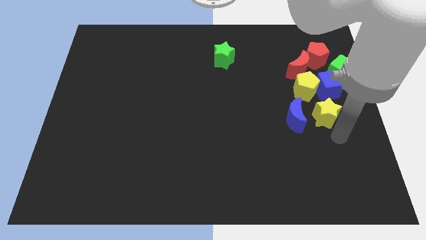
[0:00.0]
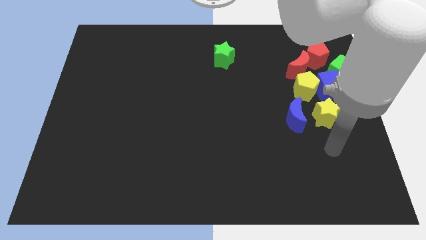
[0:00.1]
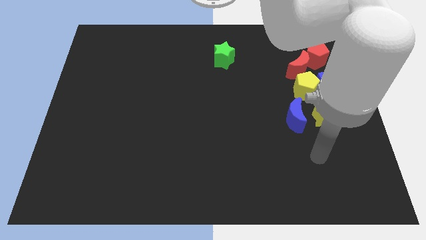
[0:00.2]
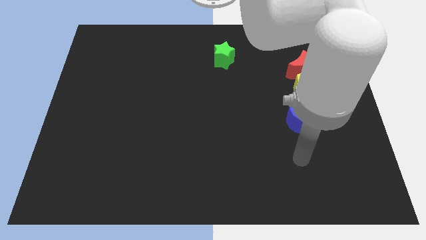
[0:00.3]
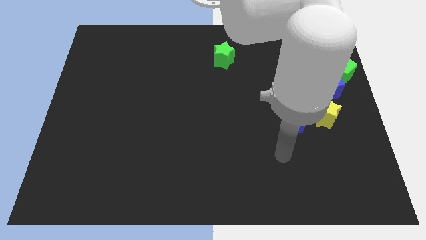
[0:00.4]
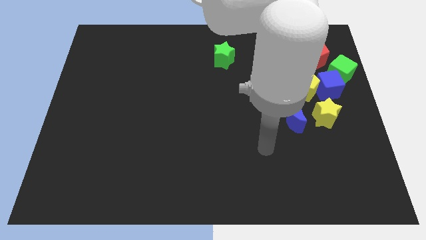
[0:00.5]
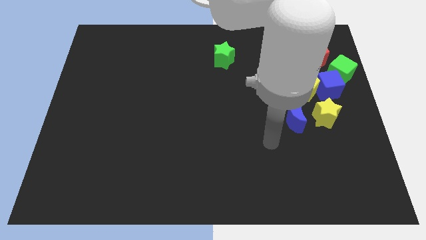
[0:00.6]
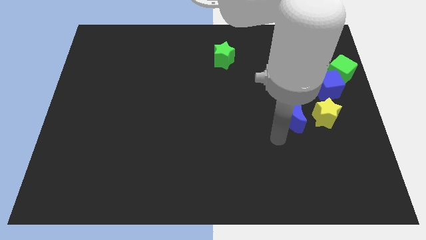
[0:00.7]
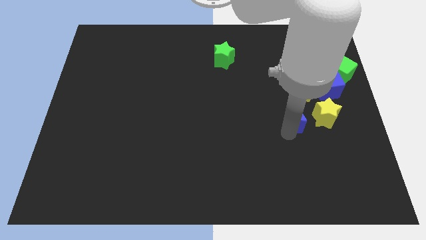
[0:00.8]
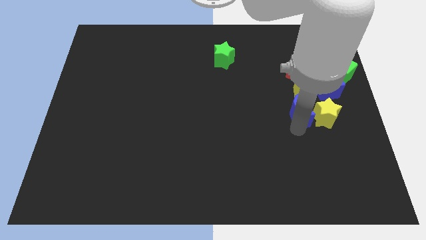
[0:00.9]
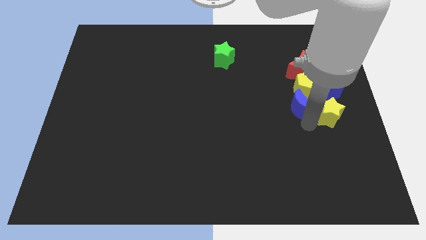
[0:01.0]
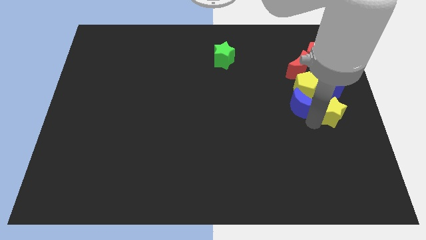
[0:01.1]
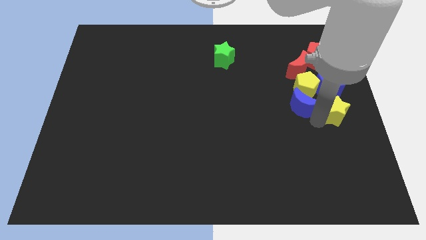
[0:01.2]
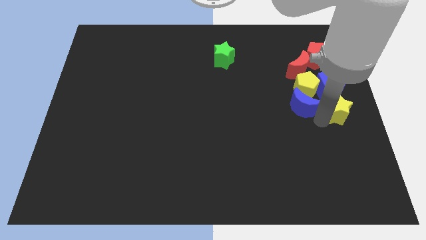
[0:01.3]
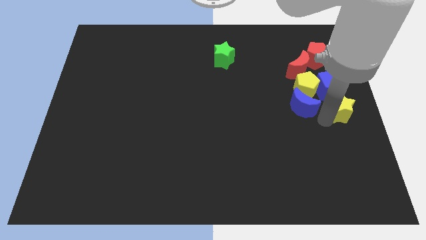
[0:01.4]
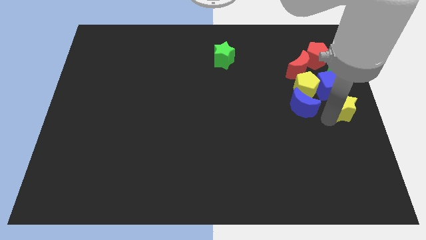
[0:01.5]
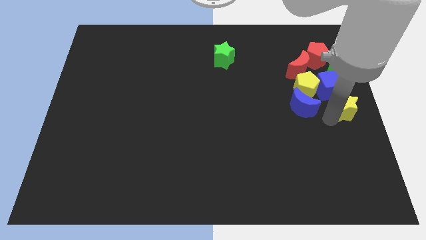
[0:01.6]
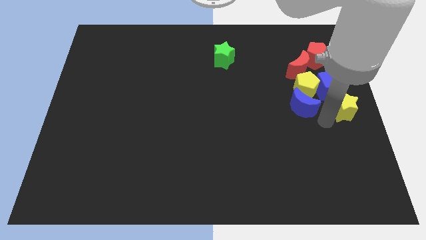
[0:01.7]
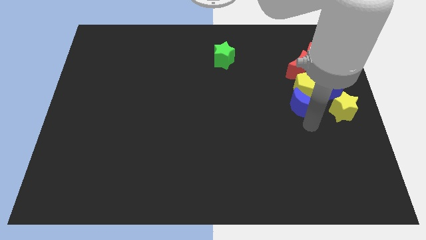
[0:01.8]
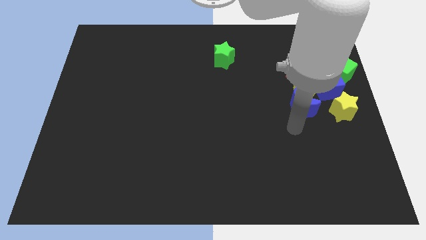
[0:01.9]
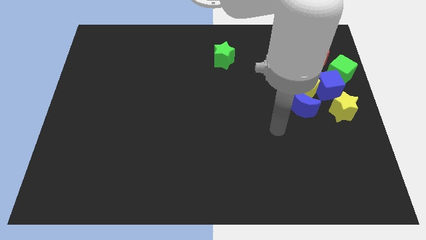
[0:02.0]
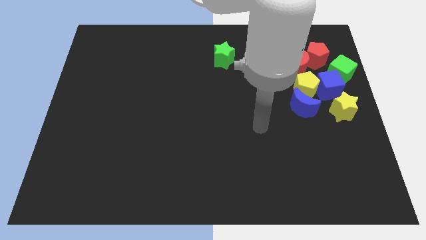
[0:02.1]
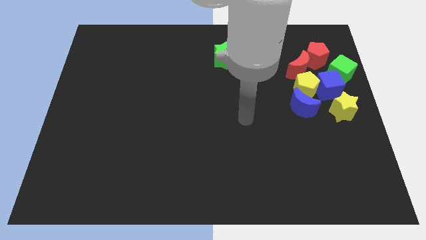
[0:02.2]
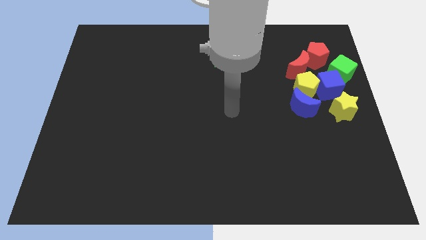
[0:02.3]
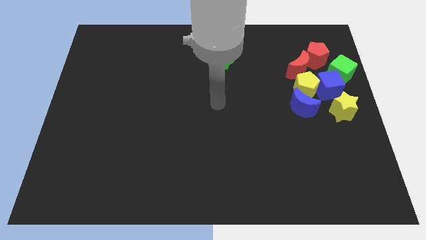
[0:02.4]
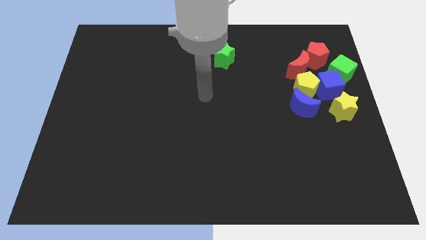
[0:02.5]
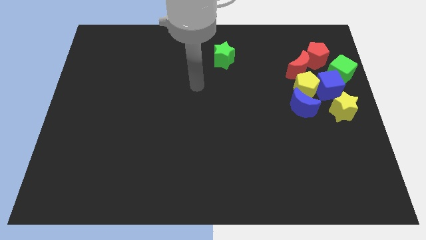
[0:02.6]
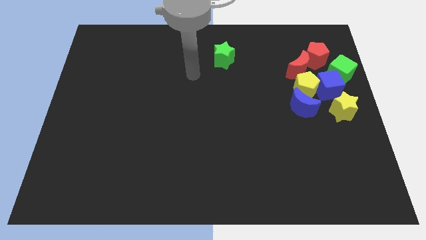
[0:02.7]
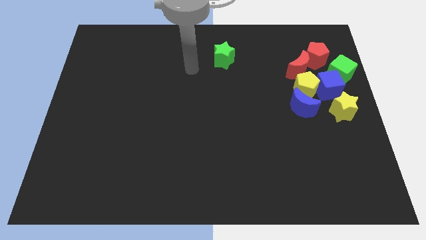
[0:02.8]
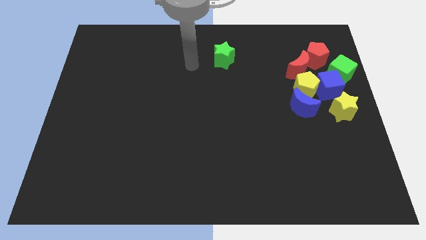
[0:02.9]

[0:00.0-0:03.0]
push the blue crescent below the yellow pentagon

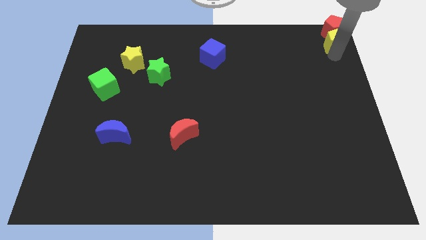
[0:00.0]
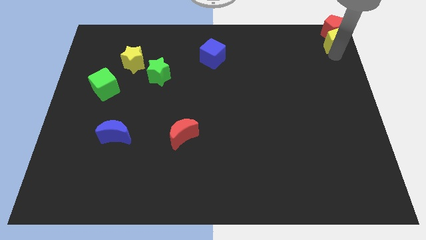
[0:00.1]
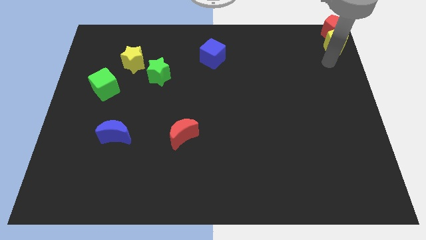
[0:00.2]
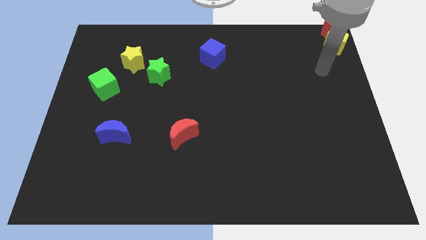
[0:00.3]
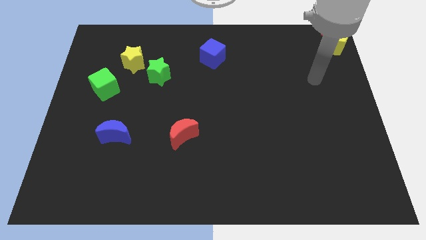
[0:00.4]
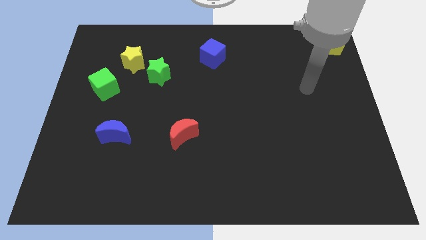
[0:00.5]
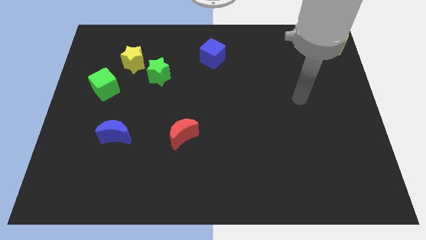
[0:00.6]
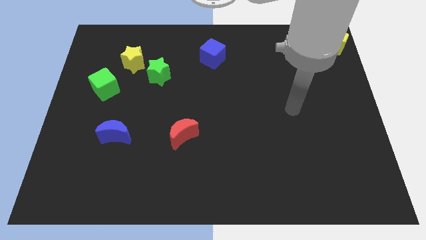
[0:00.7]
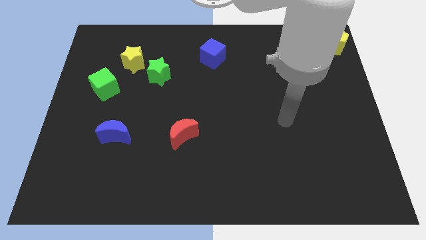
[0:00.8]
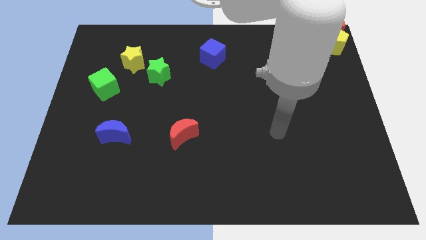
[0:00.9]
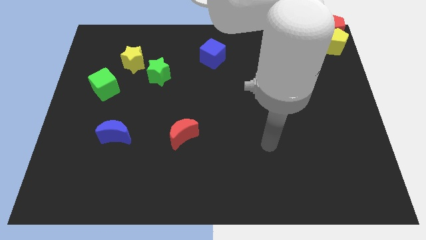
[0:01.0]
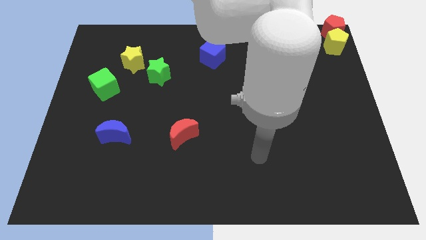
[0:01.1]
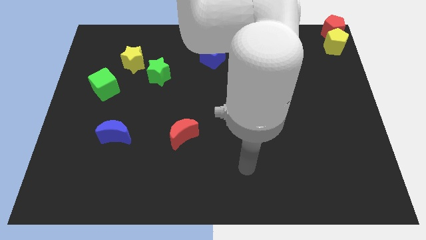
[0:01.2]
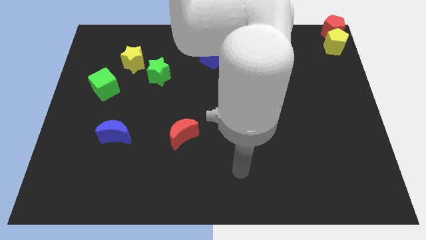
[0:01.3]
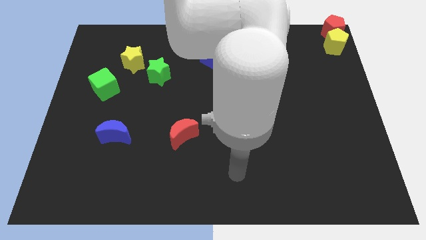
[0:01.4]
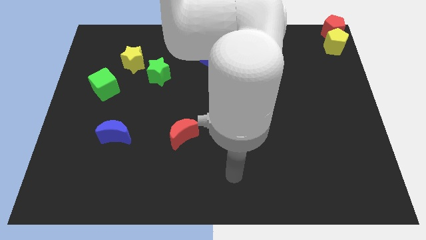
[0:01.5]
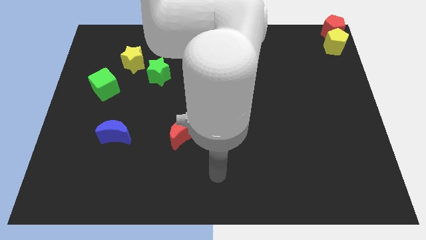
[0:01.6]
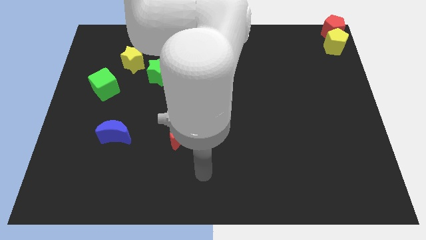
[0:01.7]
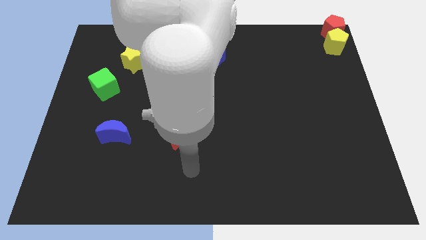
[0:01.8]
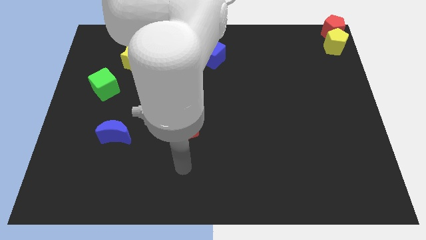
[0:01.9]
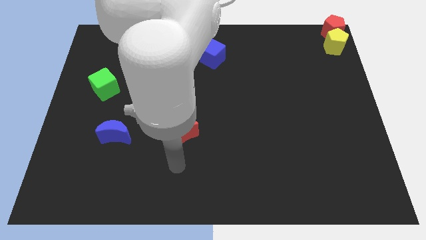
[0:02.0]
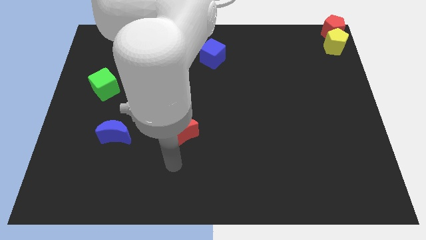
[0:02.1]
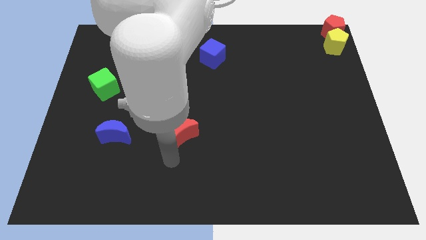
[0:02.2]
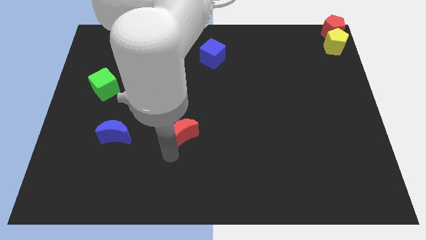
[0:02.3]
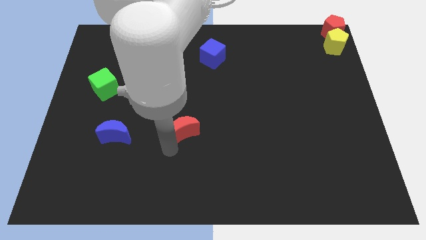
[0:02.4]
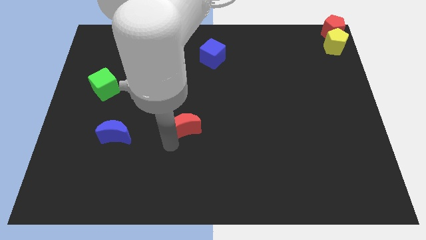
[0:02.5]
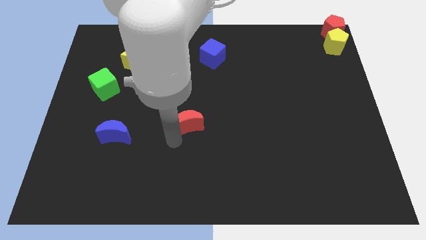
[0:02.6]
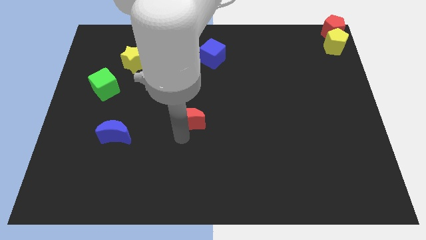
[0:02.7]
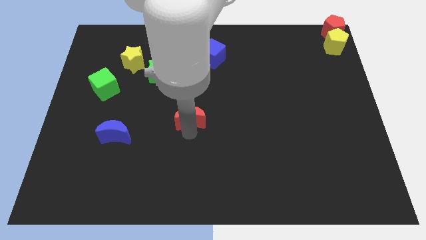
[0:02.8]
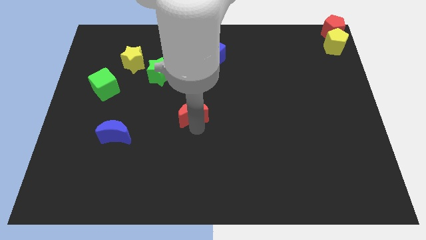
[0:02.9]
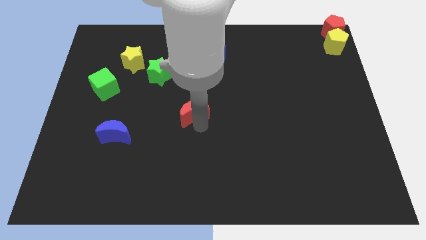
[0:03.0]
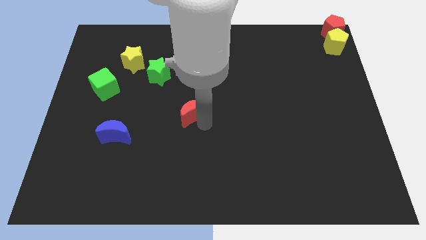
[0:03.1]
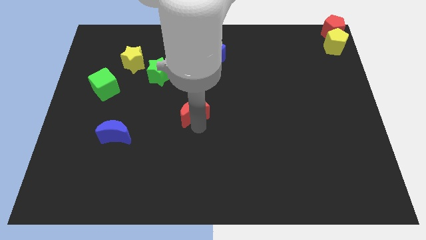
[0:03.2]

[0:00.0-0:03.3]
slightly push the red moon upwards

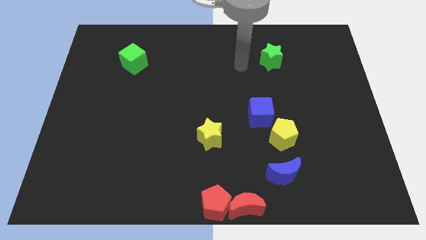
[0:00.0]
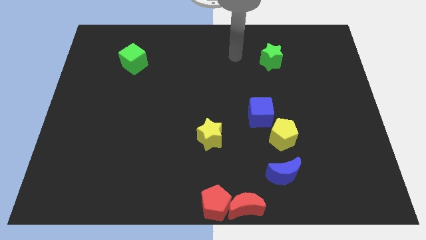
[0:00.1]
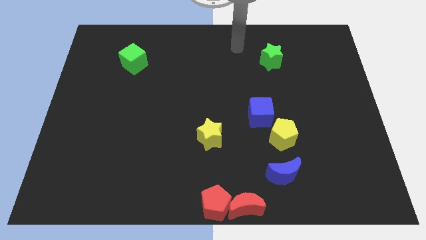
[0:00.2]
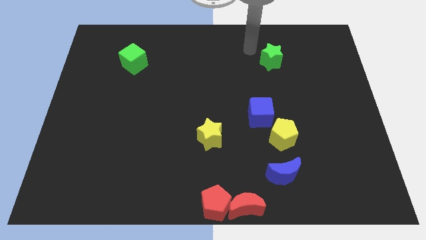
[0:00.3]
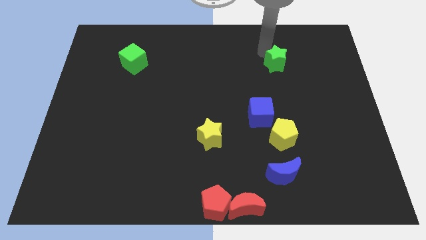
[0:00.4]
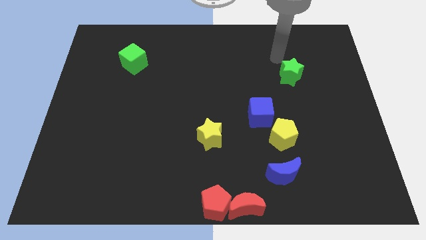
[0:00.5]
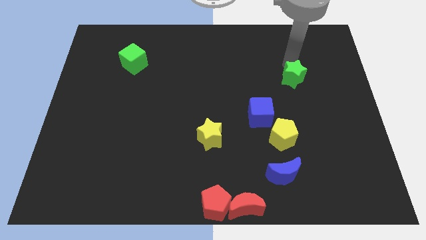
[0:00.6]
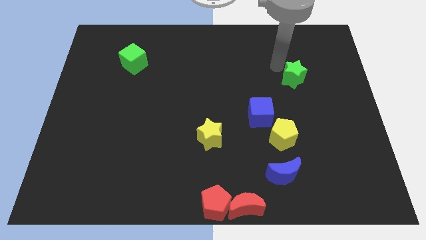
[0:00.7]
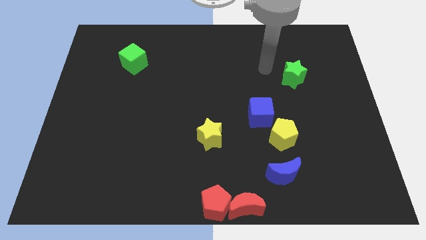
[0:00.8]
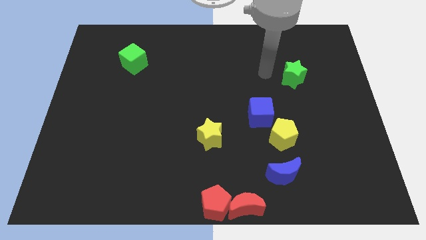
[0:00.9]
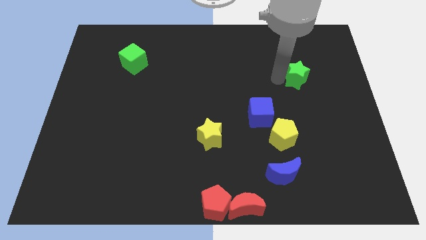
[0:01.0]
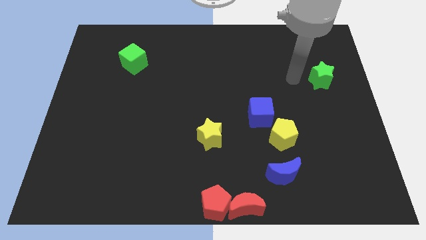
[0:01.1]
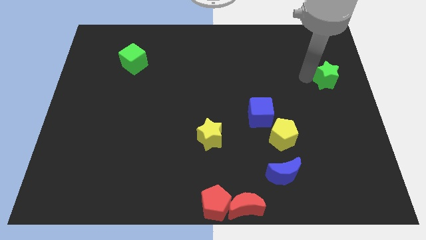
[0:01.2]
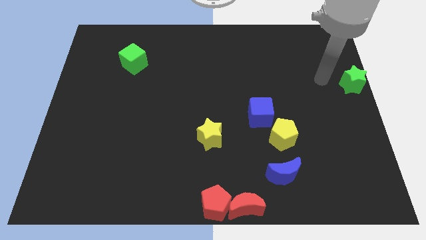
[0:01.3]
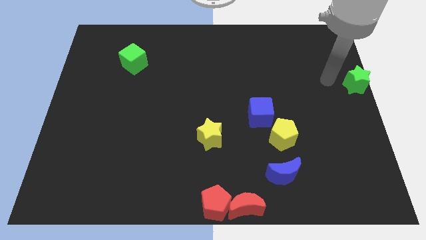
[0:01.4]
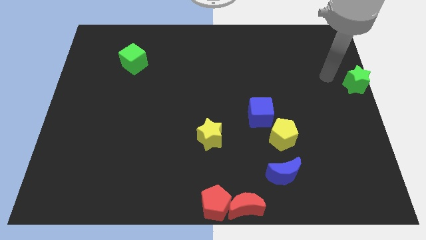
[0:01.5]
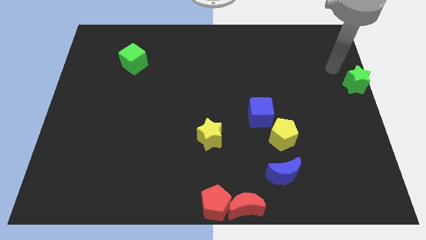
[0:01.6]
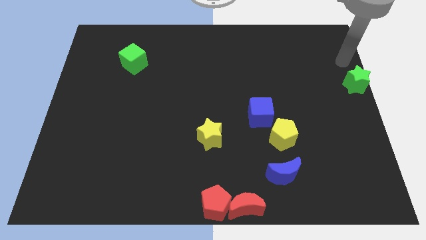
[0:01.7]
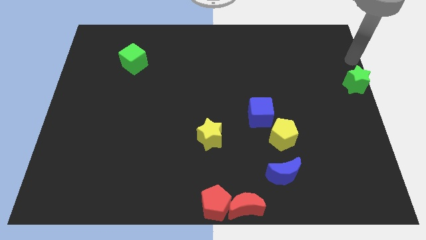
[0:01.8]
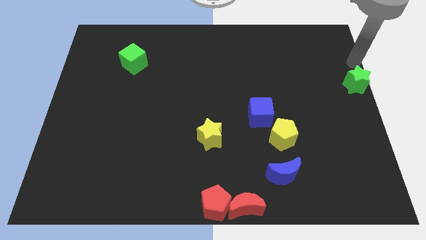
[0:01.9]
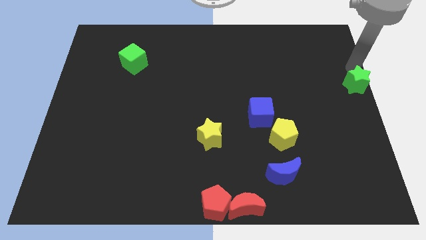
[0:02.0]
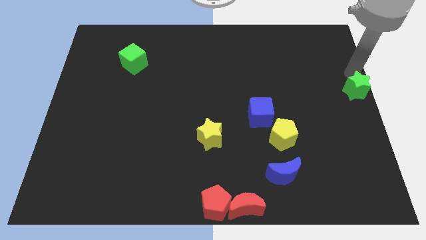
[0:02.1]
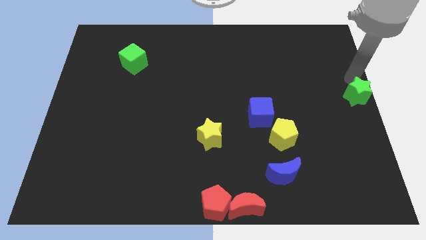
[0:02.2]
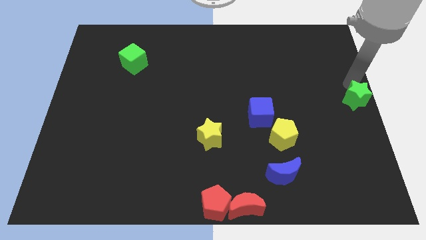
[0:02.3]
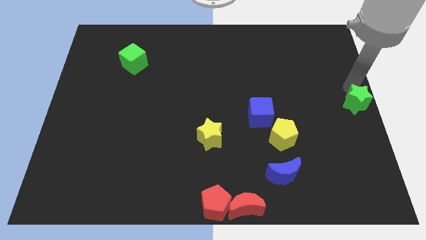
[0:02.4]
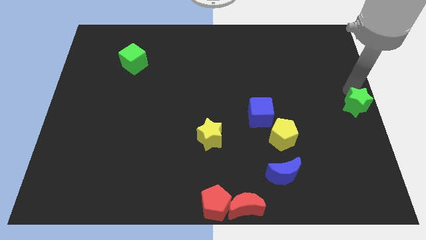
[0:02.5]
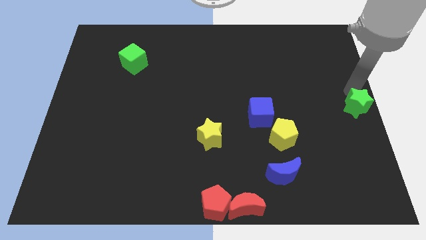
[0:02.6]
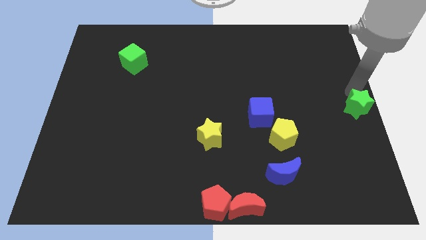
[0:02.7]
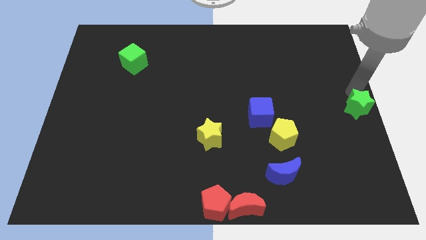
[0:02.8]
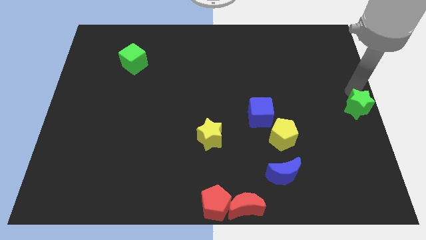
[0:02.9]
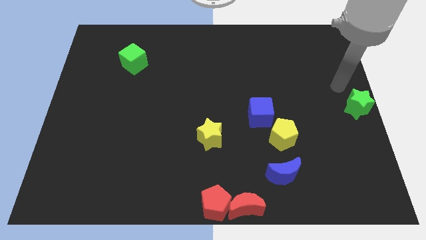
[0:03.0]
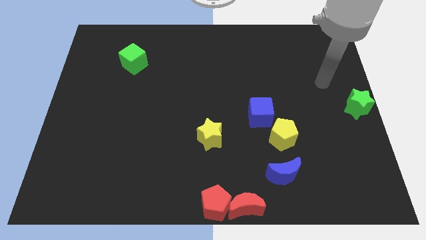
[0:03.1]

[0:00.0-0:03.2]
place the green star right to the blue cube
